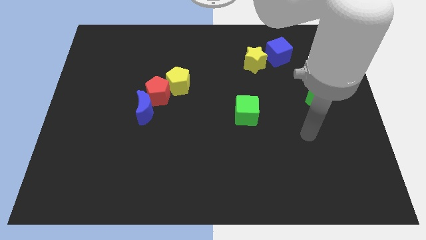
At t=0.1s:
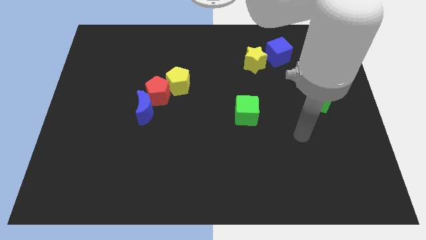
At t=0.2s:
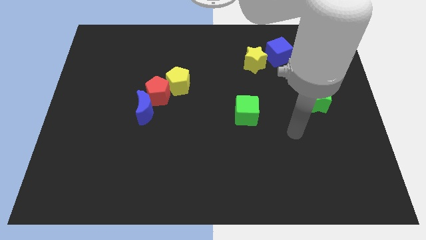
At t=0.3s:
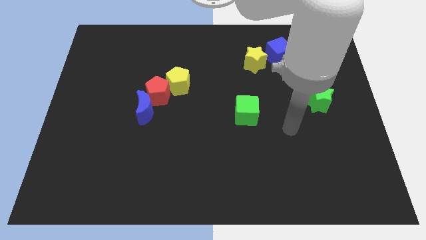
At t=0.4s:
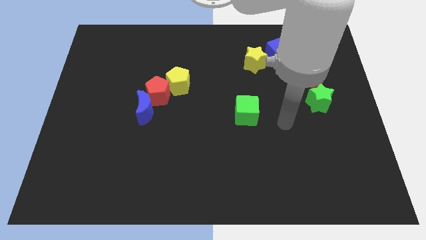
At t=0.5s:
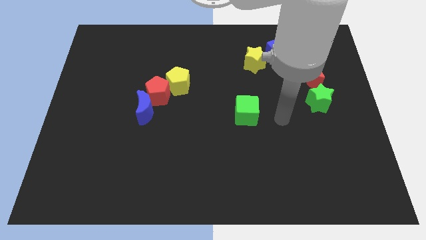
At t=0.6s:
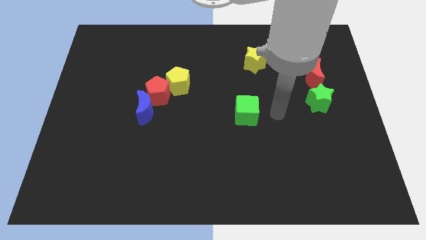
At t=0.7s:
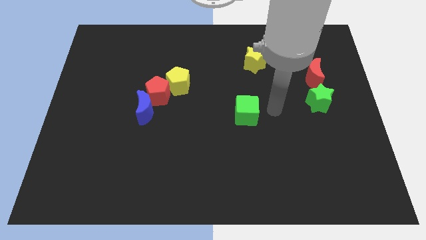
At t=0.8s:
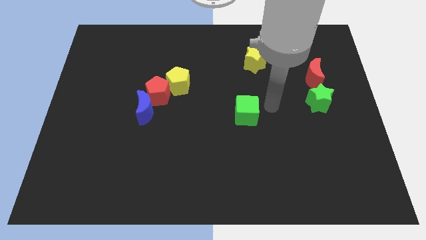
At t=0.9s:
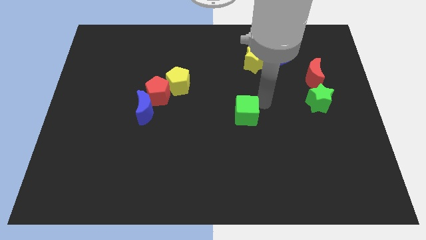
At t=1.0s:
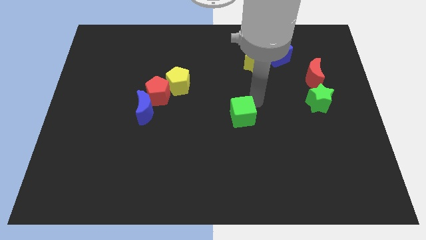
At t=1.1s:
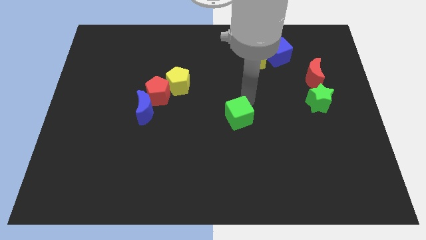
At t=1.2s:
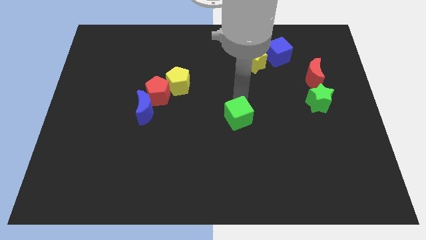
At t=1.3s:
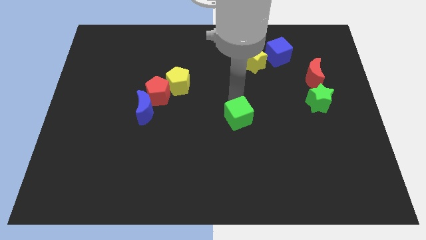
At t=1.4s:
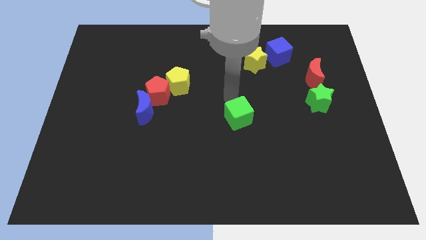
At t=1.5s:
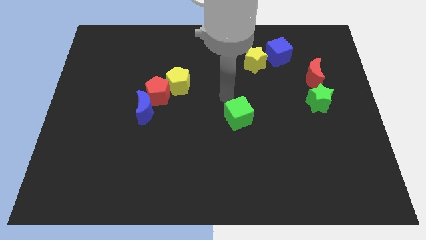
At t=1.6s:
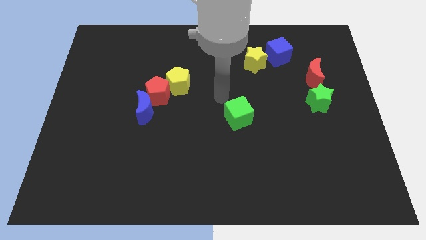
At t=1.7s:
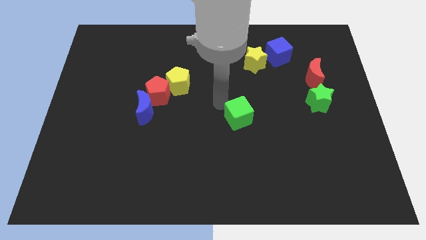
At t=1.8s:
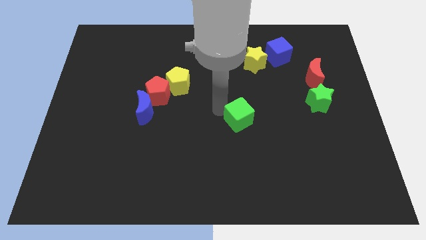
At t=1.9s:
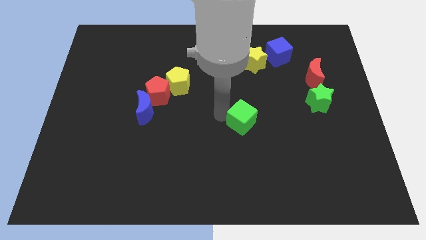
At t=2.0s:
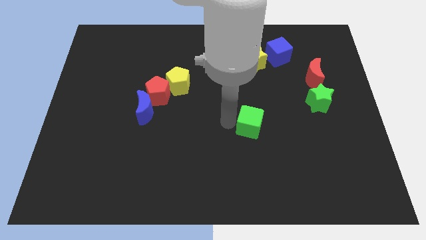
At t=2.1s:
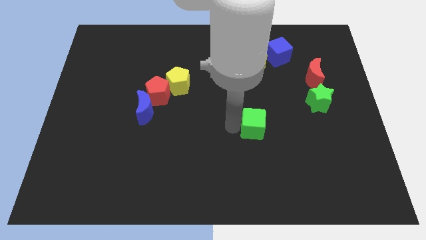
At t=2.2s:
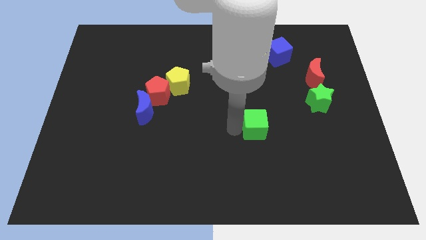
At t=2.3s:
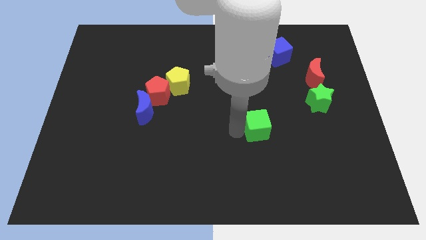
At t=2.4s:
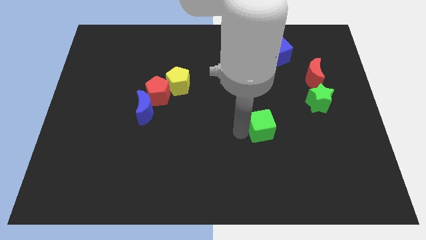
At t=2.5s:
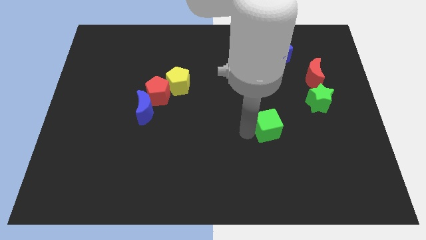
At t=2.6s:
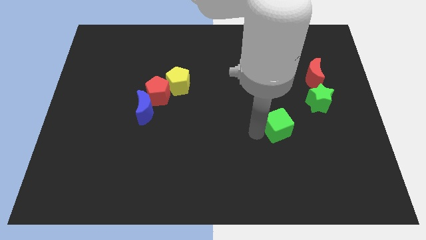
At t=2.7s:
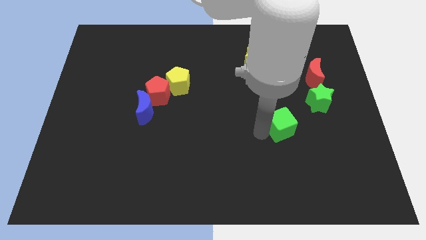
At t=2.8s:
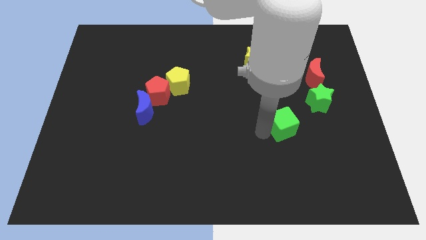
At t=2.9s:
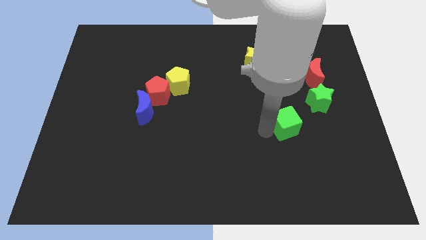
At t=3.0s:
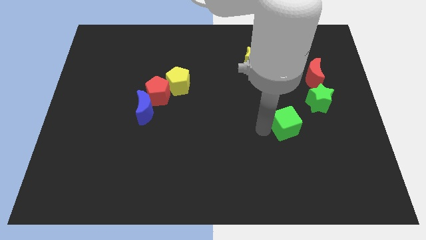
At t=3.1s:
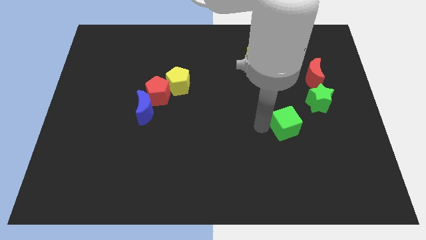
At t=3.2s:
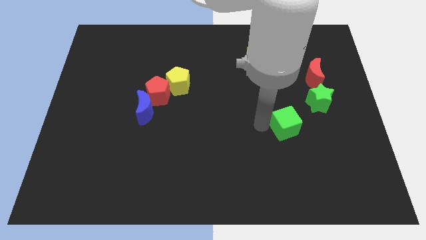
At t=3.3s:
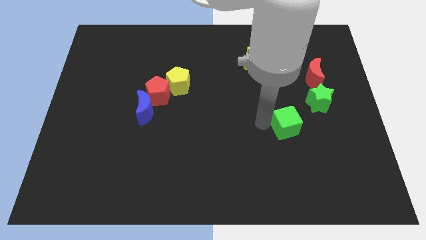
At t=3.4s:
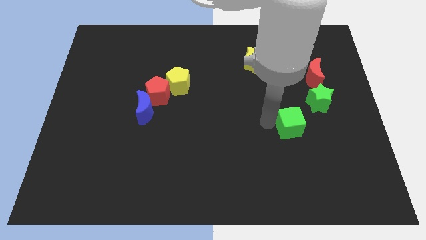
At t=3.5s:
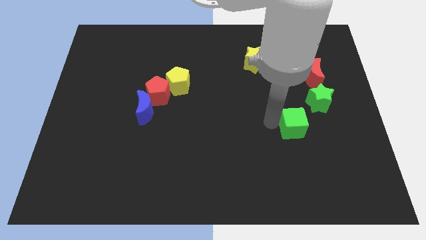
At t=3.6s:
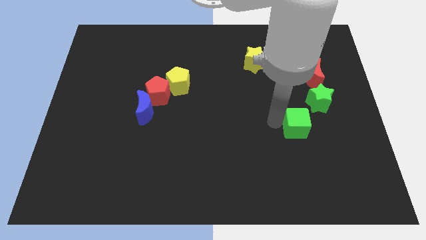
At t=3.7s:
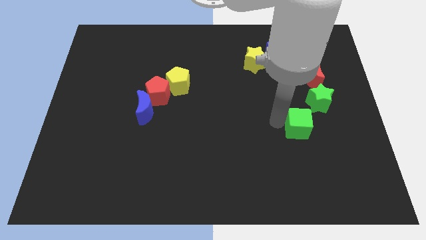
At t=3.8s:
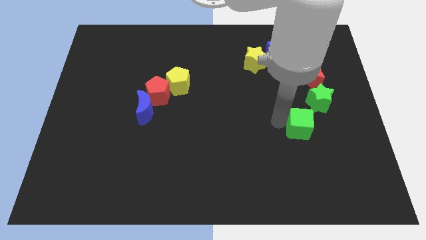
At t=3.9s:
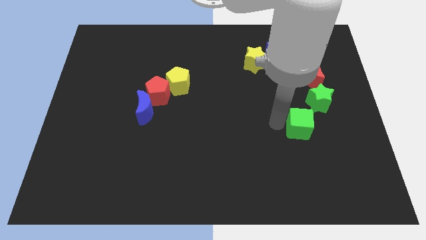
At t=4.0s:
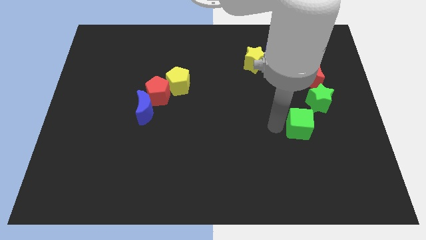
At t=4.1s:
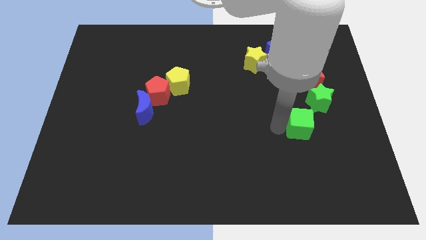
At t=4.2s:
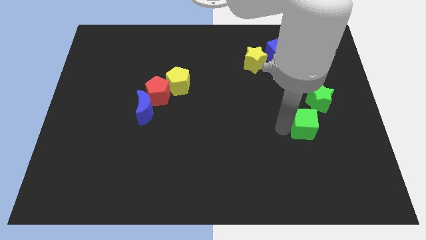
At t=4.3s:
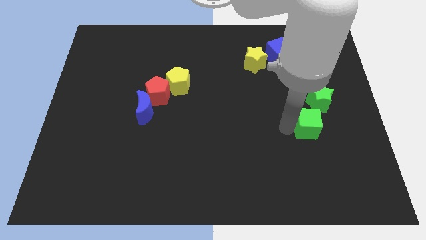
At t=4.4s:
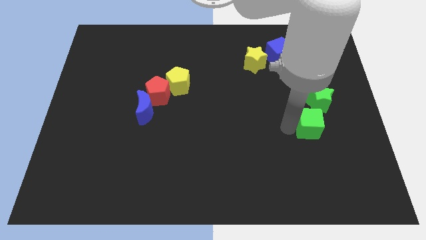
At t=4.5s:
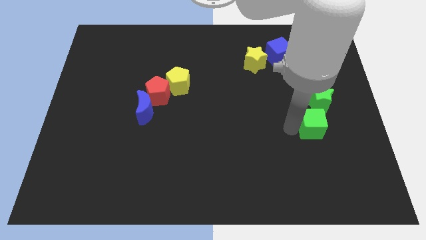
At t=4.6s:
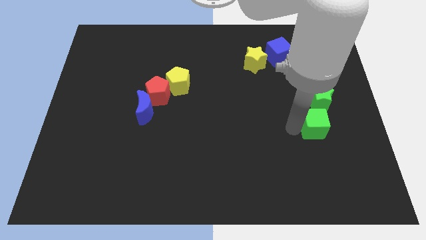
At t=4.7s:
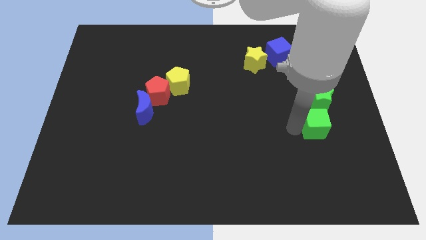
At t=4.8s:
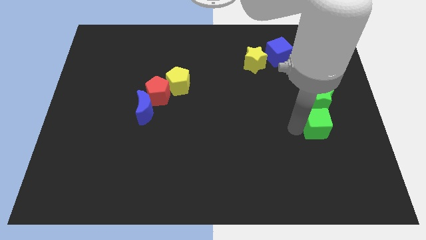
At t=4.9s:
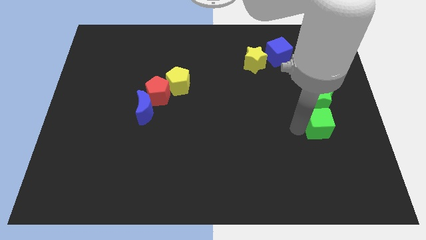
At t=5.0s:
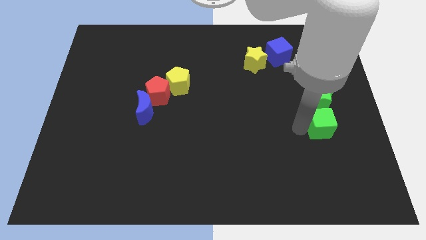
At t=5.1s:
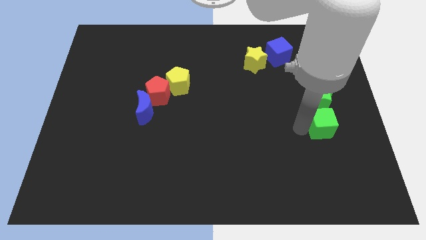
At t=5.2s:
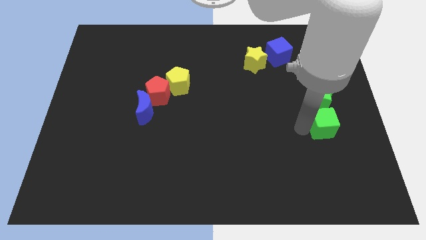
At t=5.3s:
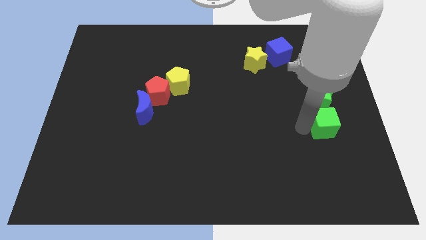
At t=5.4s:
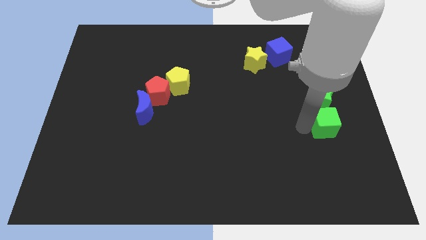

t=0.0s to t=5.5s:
place the green cube at the bottom of green star

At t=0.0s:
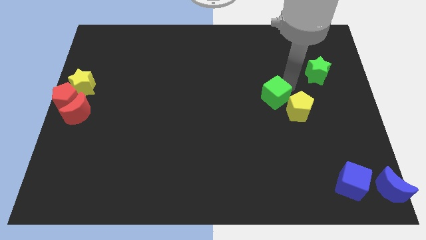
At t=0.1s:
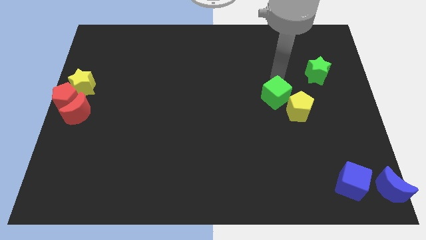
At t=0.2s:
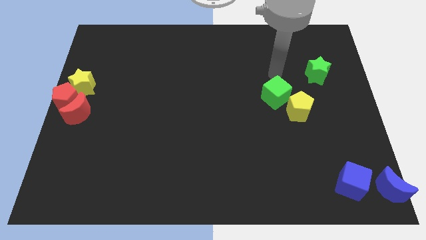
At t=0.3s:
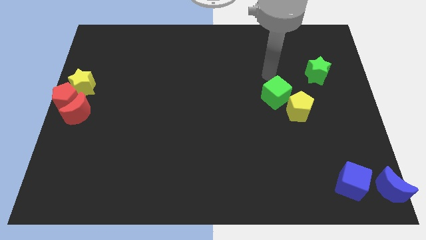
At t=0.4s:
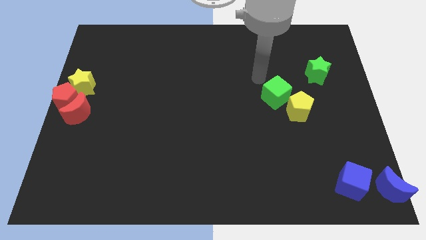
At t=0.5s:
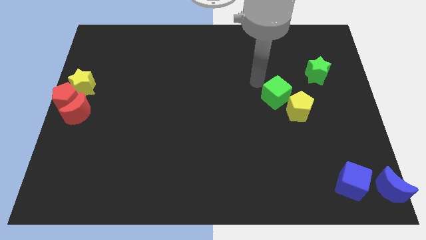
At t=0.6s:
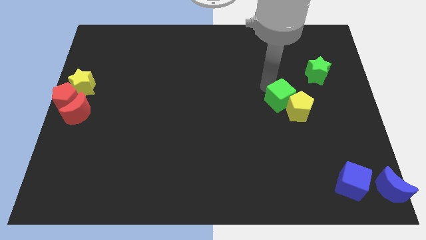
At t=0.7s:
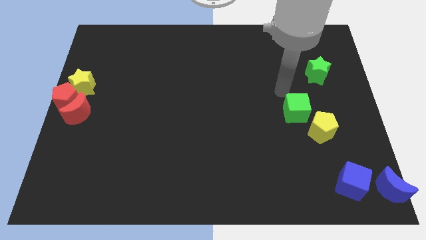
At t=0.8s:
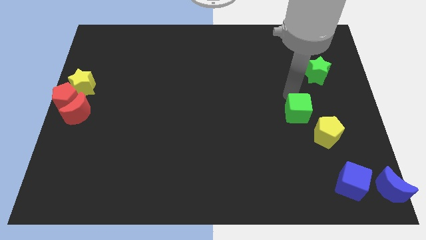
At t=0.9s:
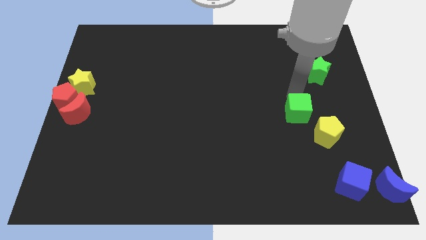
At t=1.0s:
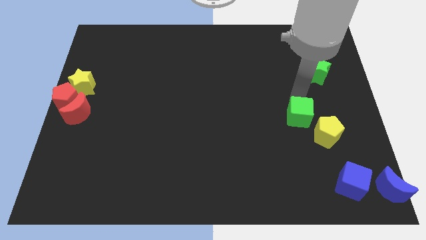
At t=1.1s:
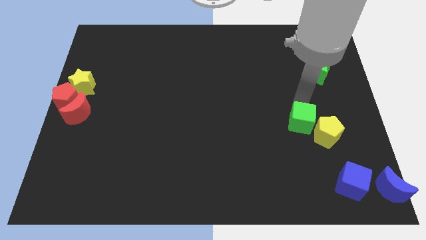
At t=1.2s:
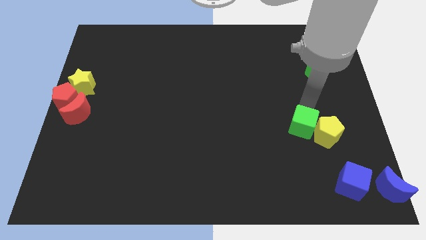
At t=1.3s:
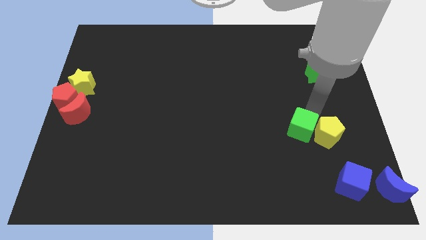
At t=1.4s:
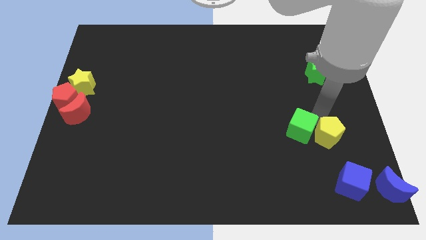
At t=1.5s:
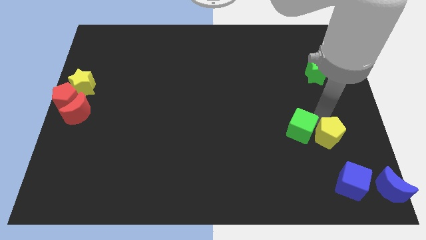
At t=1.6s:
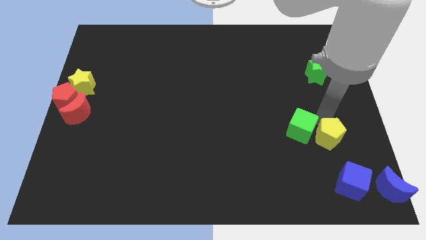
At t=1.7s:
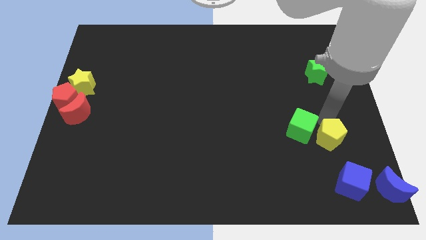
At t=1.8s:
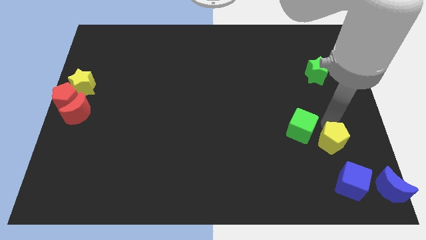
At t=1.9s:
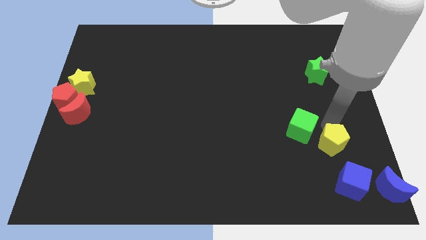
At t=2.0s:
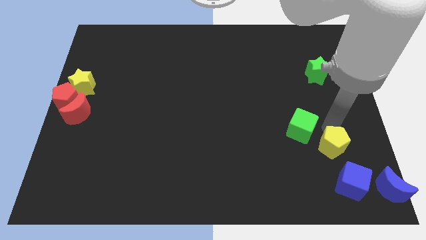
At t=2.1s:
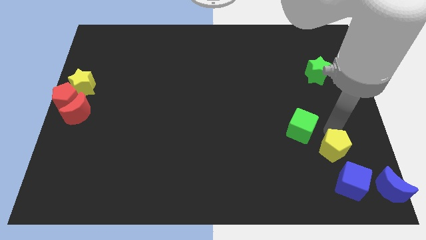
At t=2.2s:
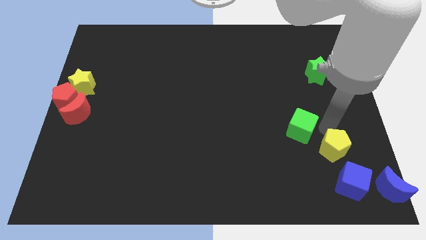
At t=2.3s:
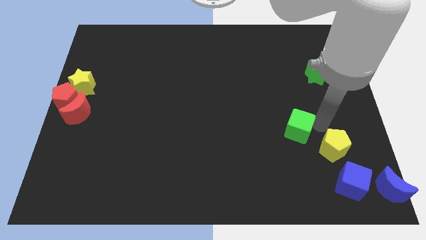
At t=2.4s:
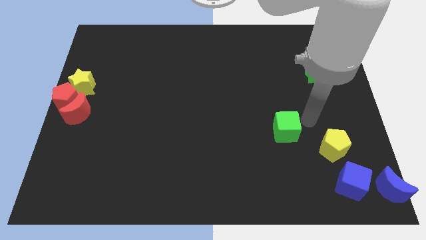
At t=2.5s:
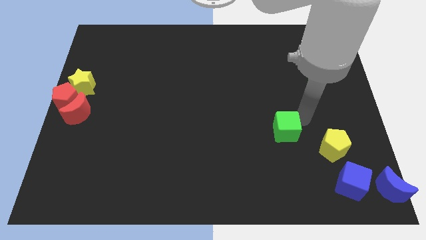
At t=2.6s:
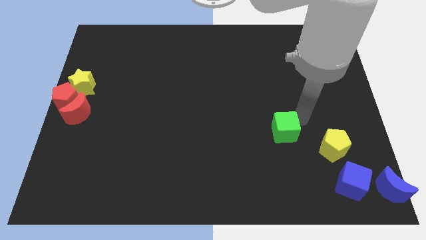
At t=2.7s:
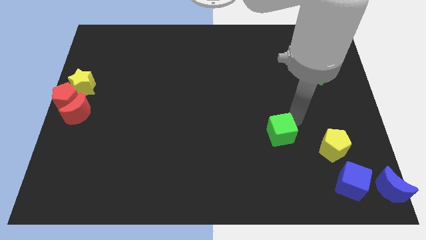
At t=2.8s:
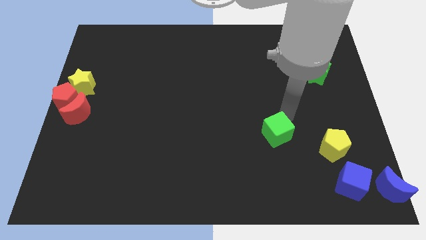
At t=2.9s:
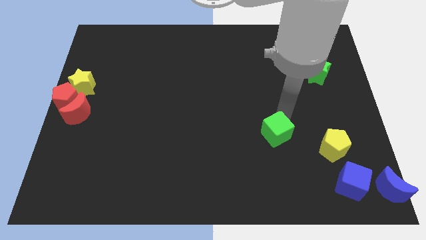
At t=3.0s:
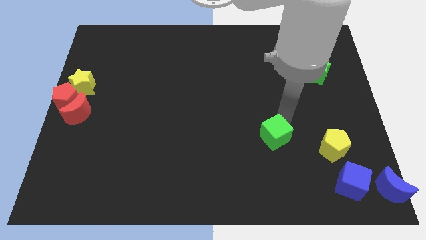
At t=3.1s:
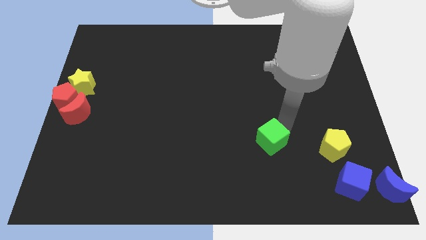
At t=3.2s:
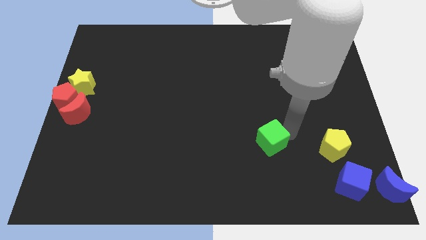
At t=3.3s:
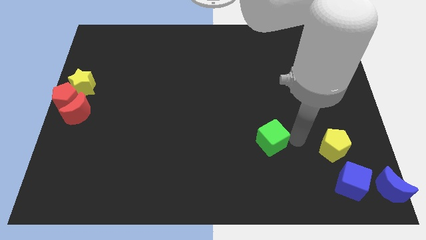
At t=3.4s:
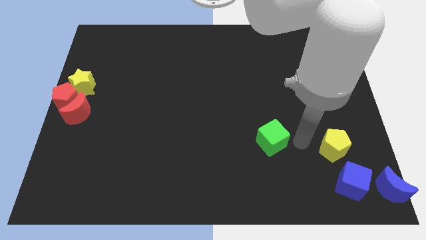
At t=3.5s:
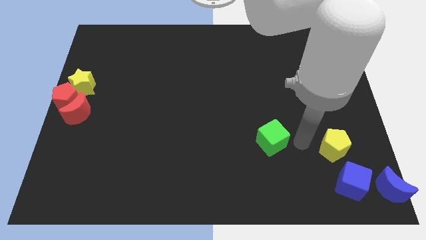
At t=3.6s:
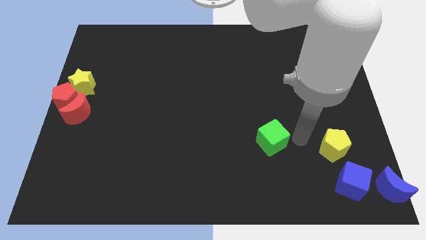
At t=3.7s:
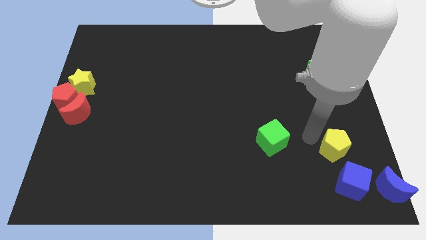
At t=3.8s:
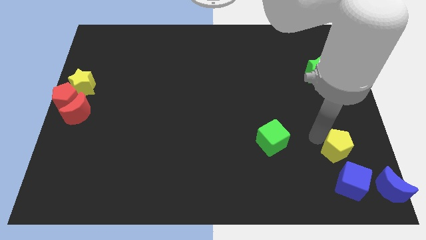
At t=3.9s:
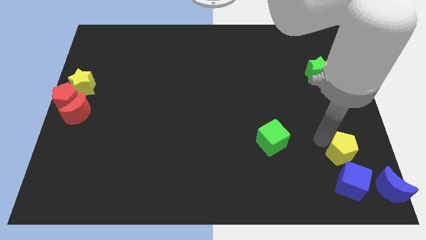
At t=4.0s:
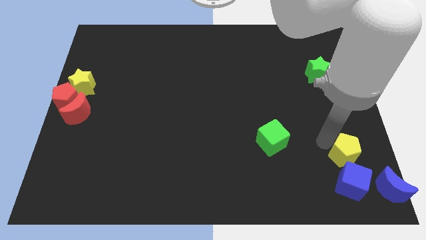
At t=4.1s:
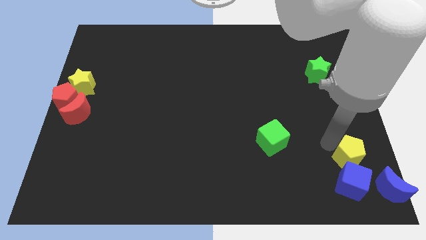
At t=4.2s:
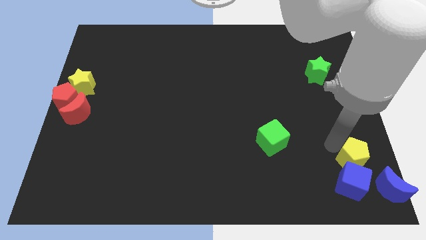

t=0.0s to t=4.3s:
separate the green cube from the yellow pentagon
